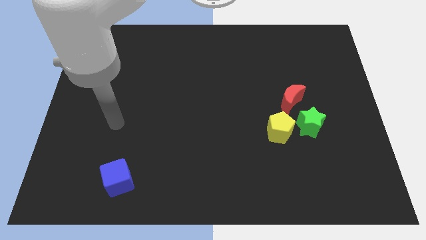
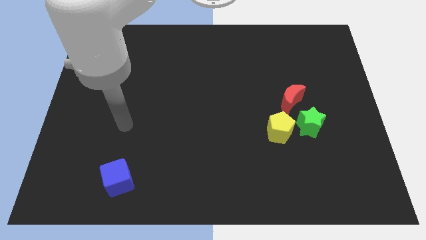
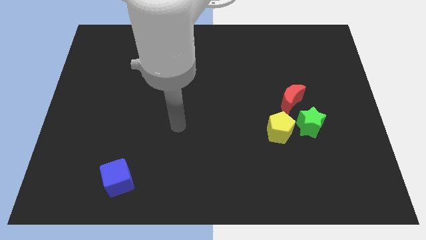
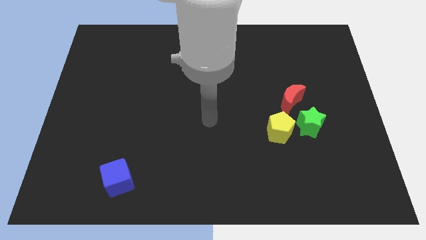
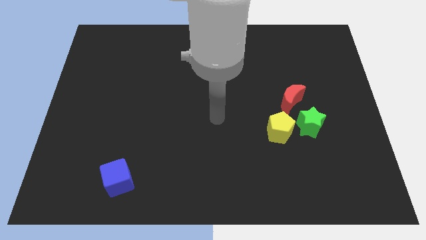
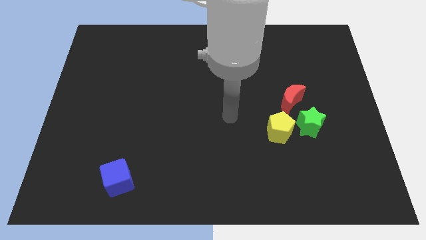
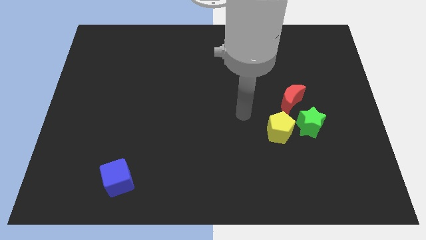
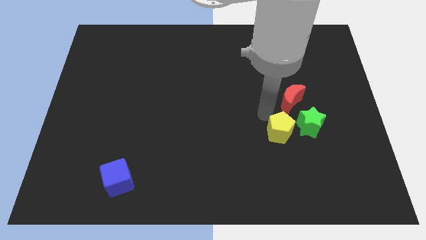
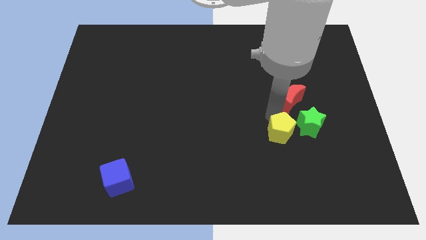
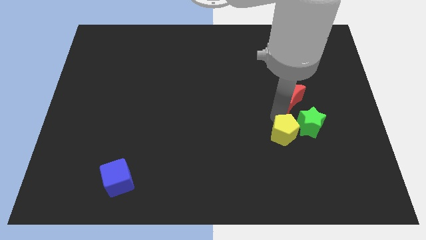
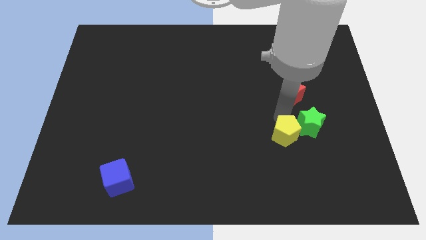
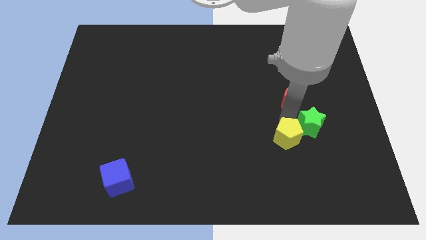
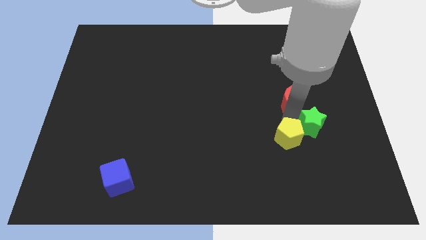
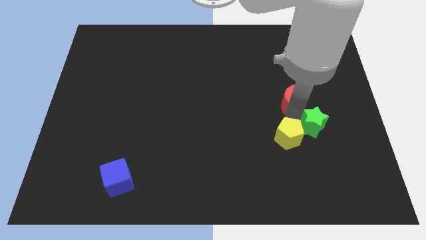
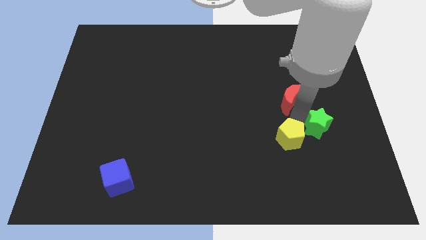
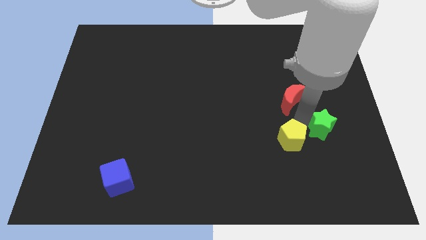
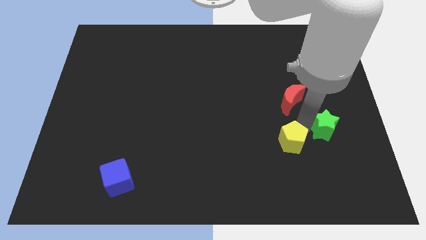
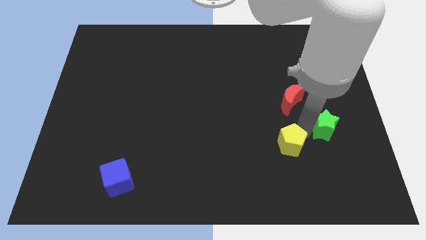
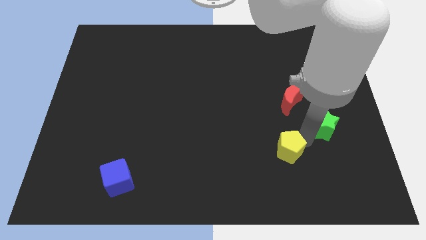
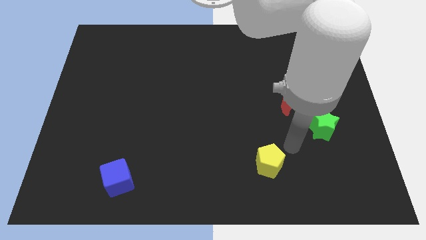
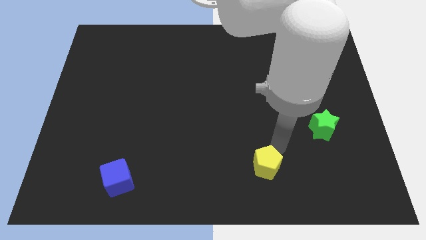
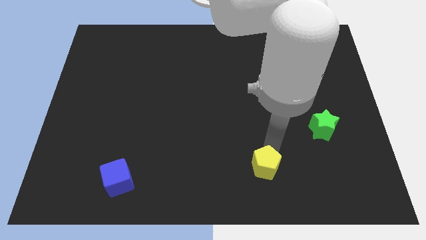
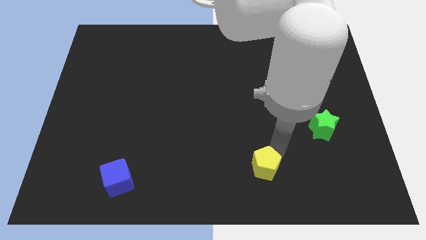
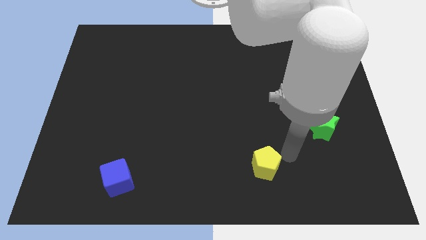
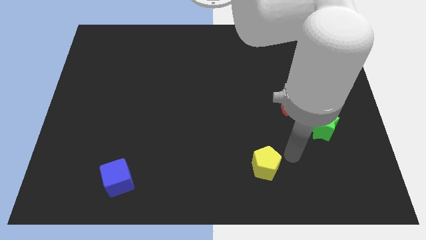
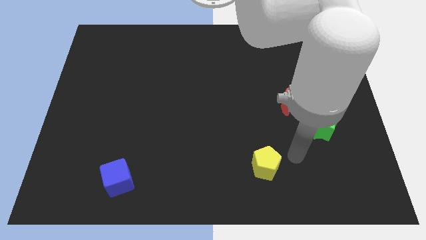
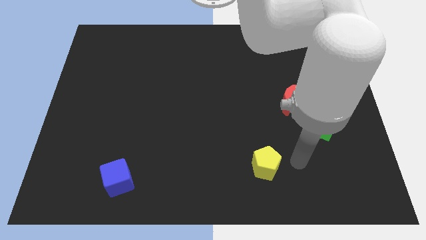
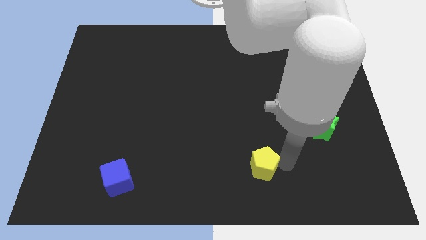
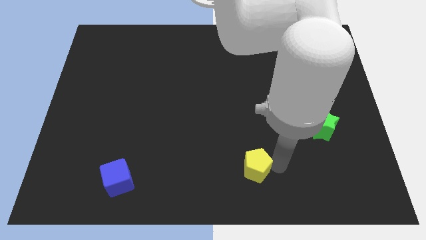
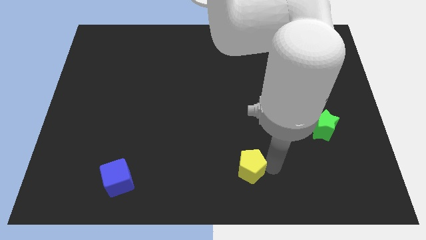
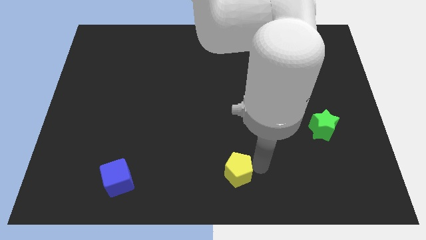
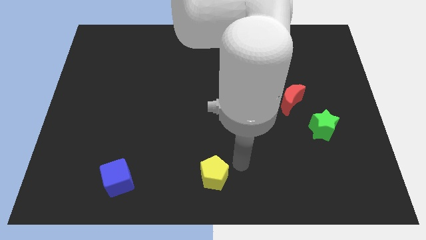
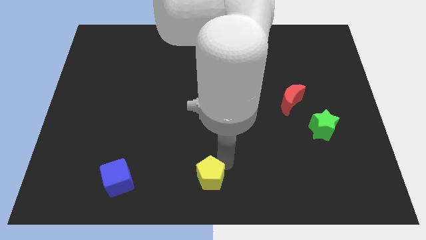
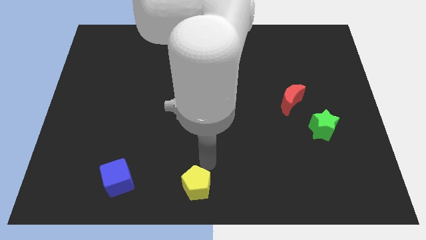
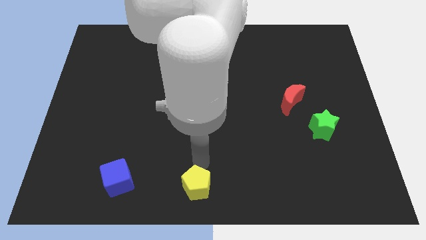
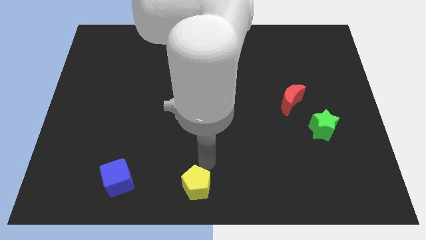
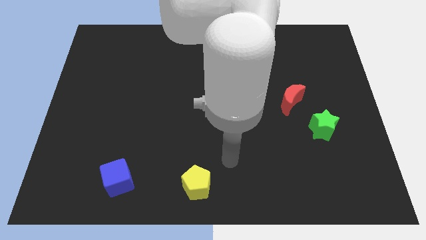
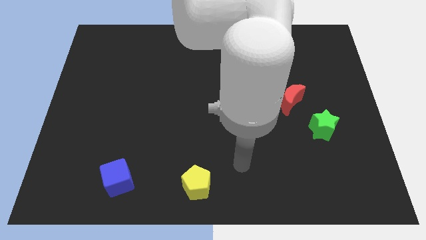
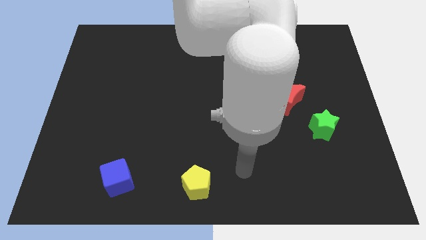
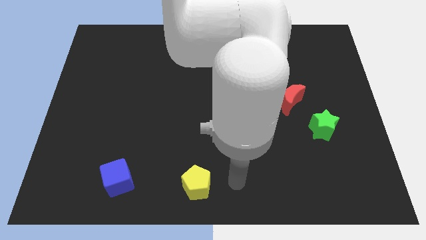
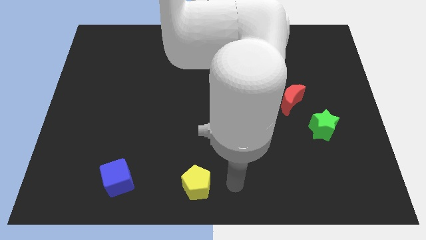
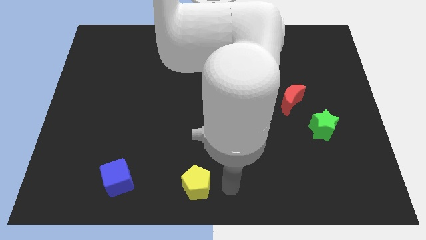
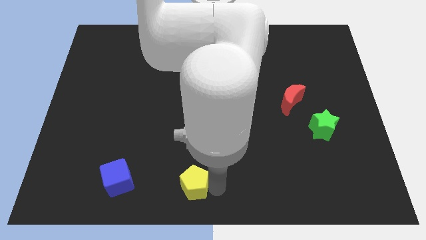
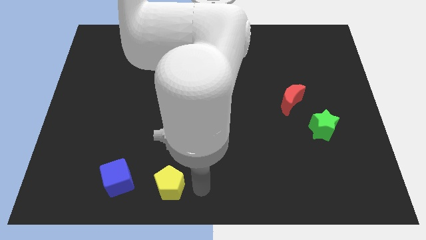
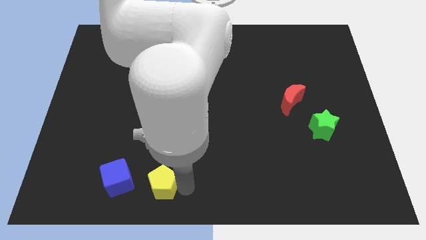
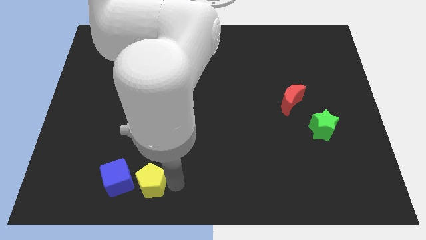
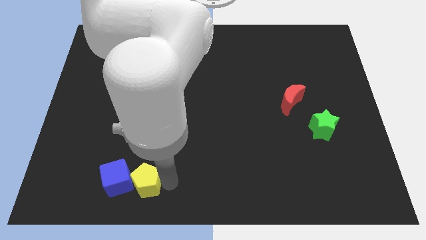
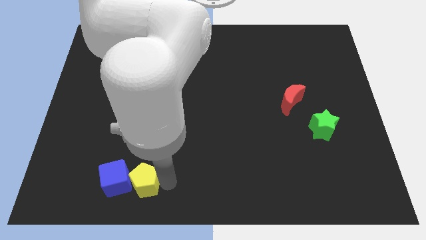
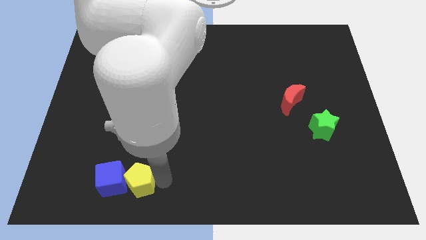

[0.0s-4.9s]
slide the yellow pentagon to the blue block

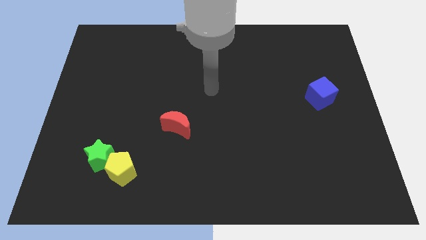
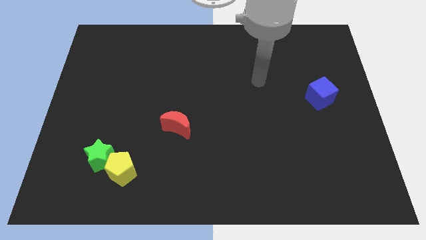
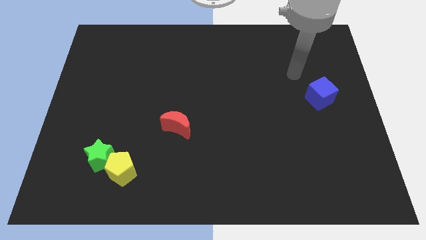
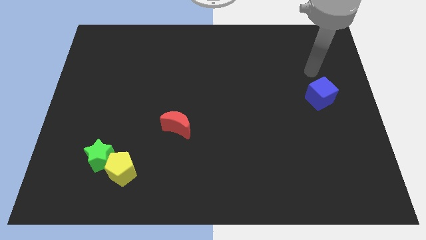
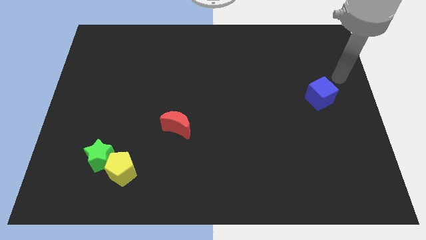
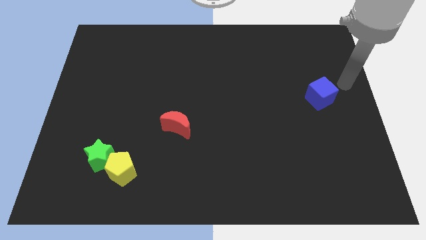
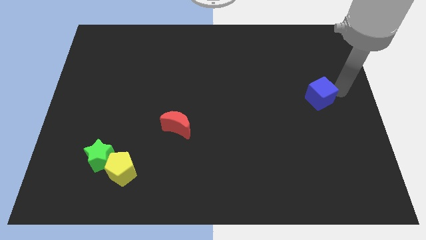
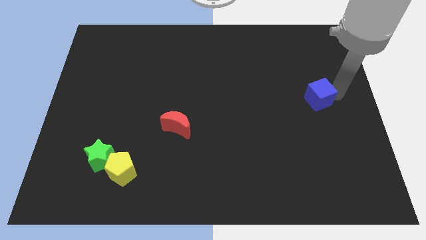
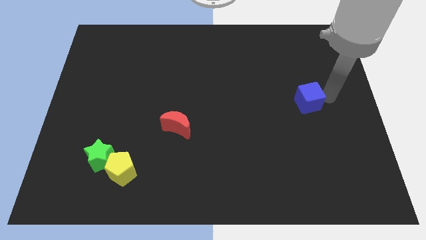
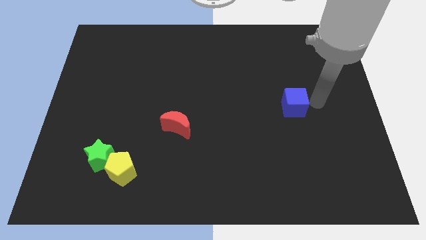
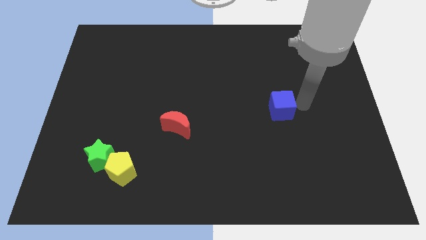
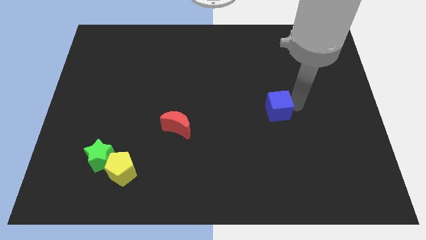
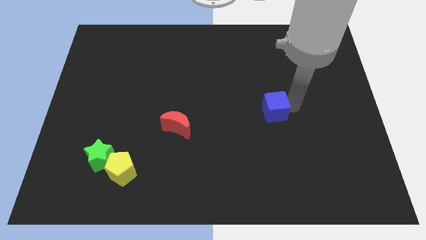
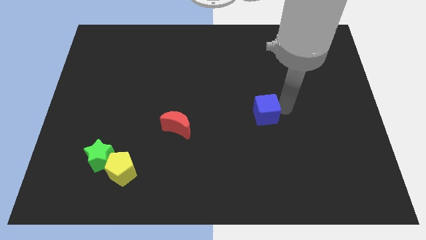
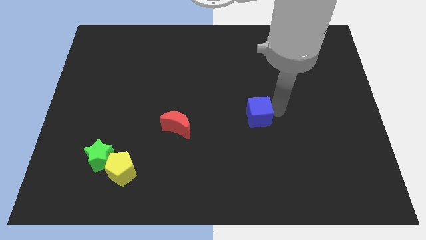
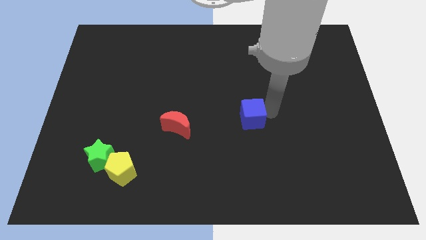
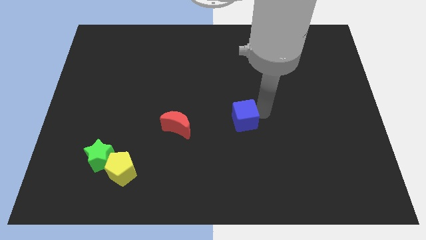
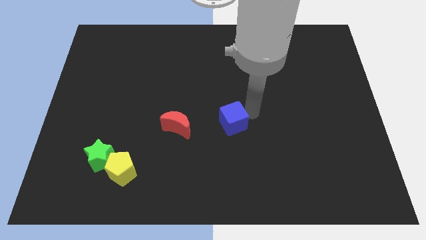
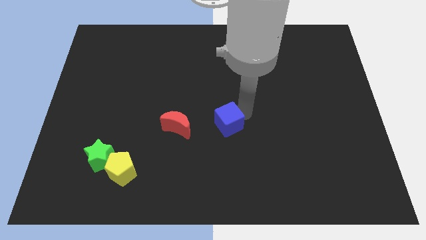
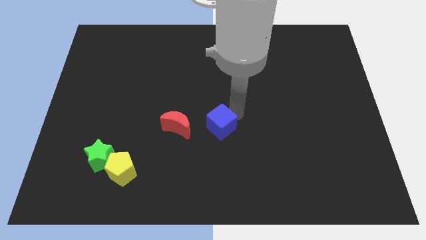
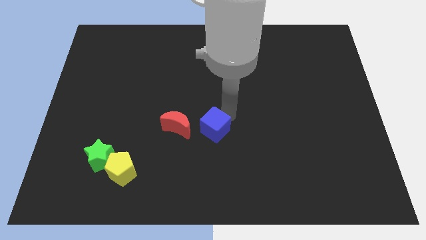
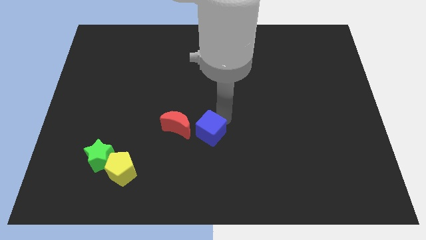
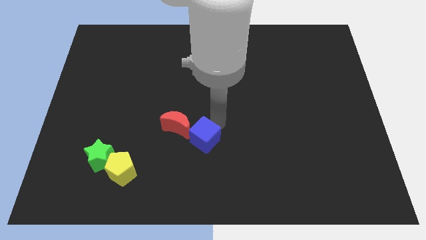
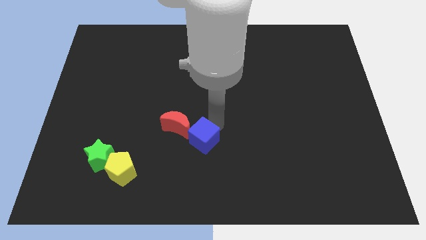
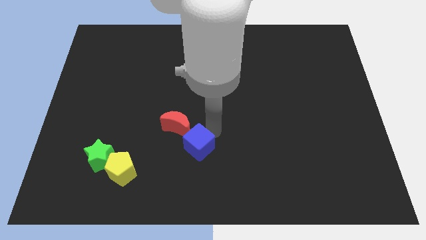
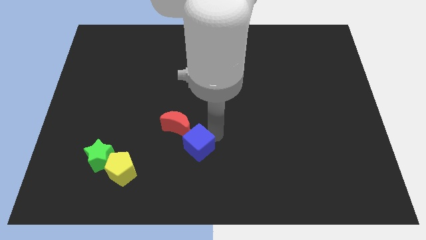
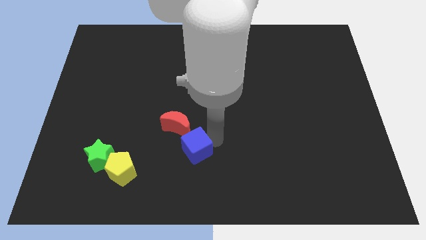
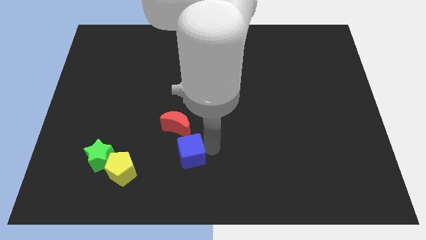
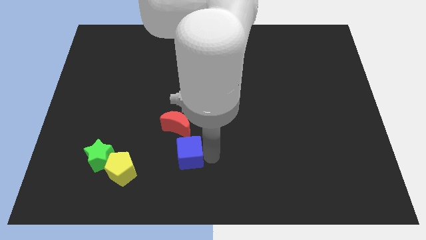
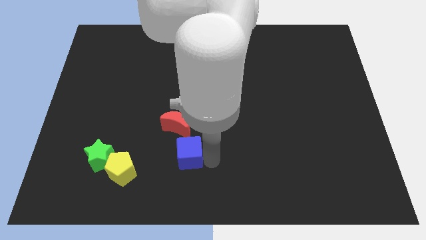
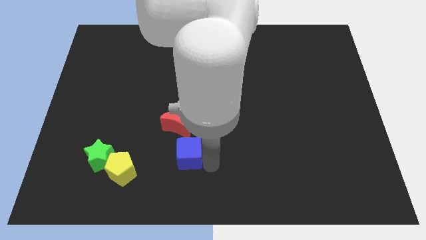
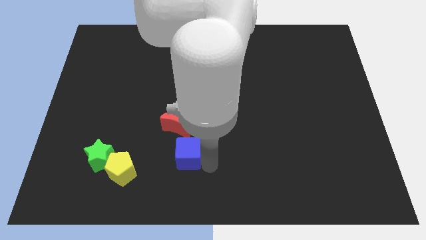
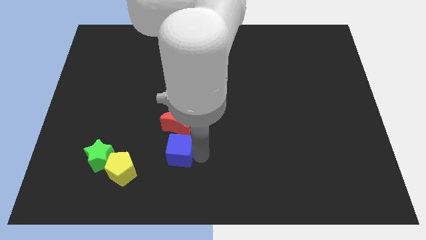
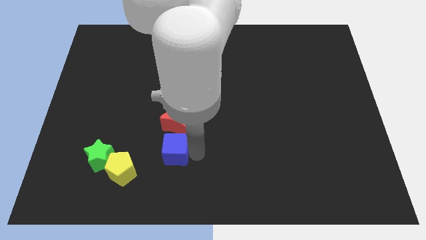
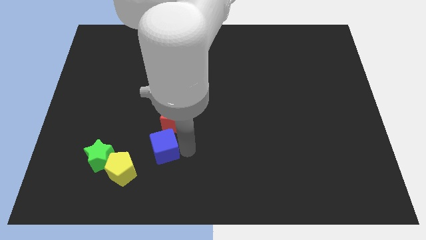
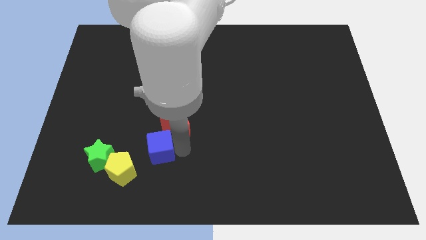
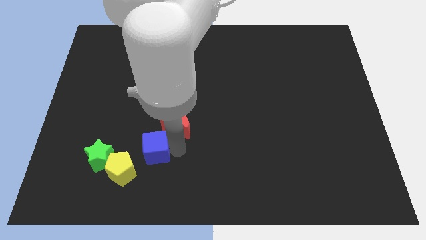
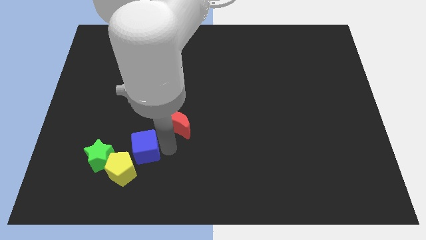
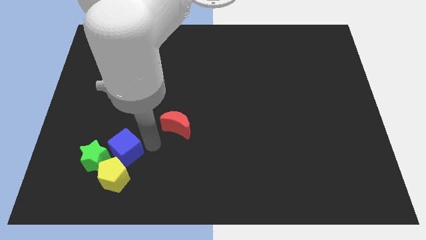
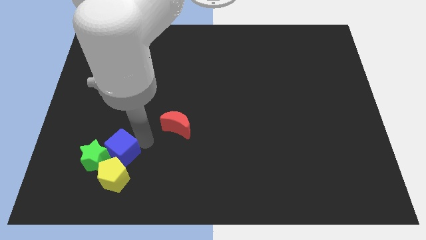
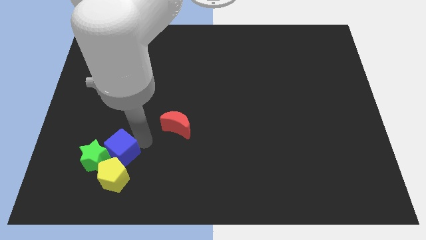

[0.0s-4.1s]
push the cube next to the star
